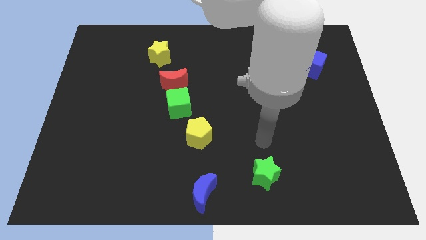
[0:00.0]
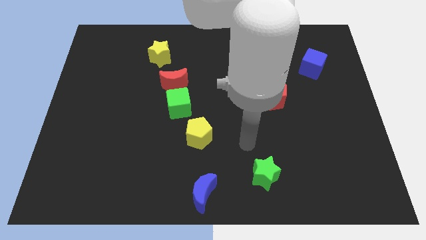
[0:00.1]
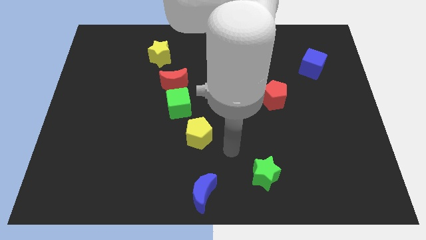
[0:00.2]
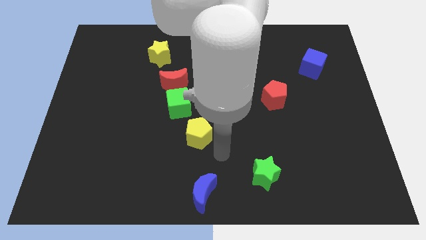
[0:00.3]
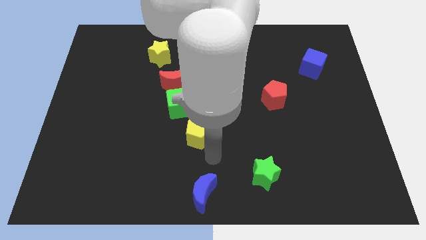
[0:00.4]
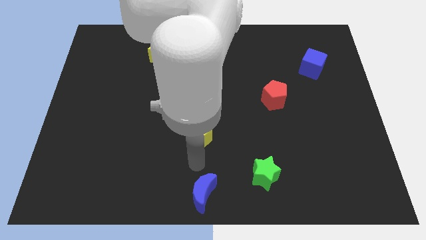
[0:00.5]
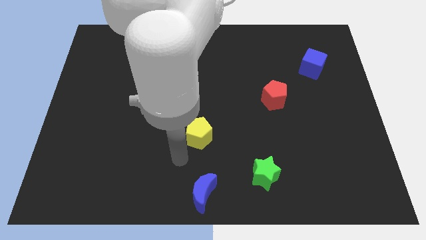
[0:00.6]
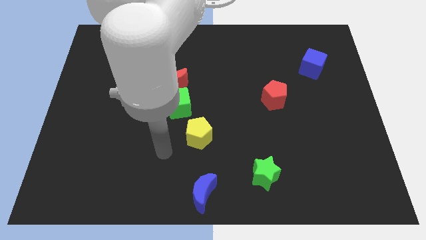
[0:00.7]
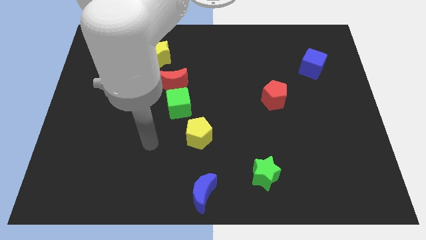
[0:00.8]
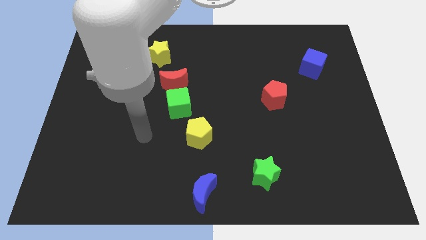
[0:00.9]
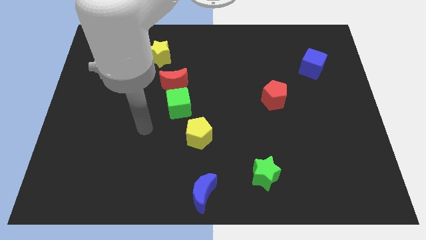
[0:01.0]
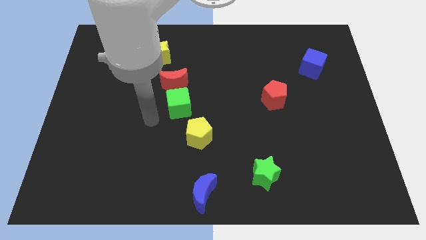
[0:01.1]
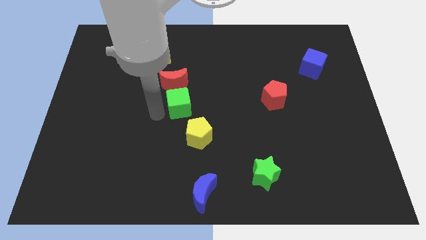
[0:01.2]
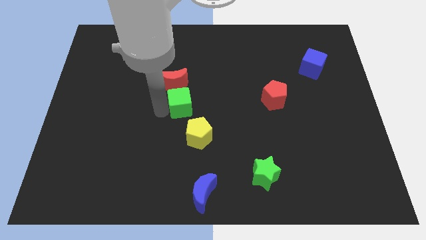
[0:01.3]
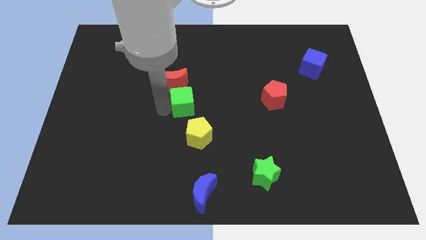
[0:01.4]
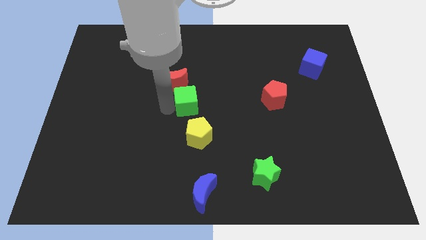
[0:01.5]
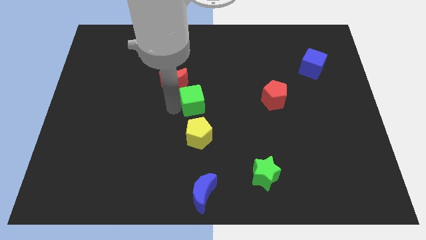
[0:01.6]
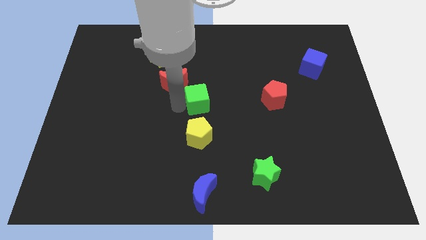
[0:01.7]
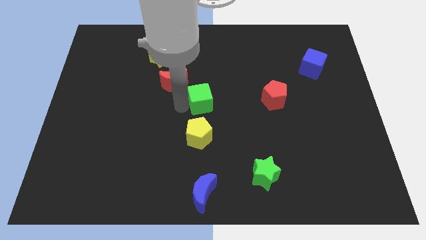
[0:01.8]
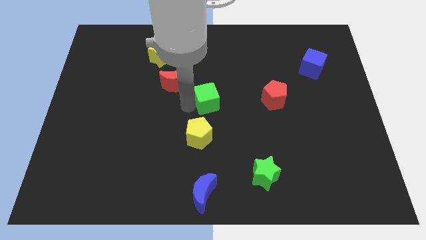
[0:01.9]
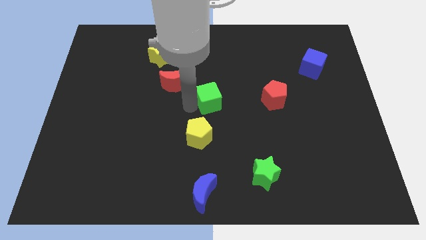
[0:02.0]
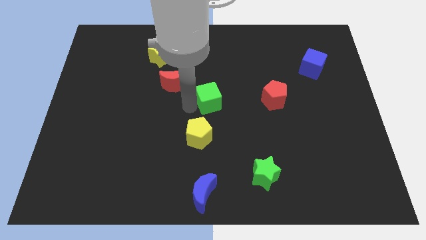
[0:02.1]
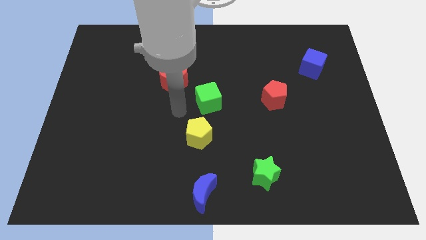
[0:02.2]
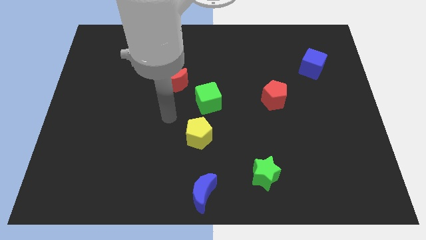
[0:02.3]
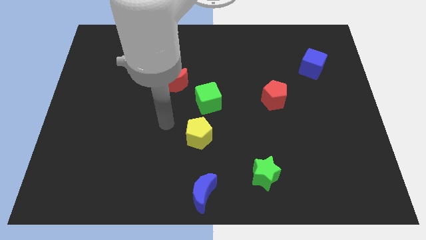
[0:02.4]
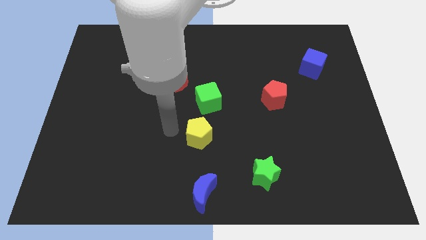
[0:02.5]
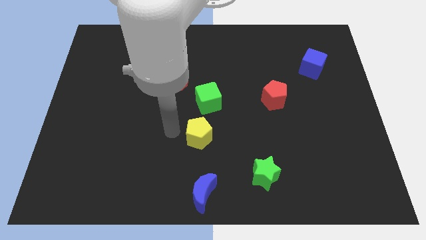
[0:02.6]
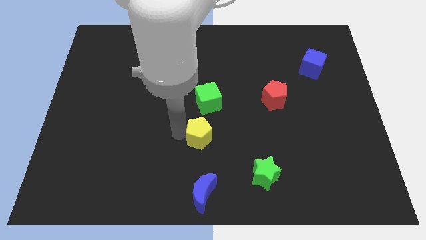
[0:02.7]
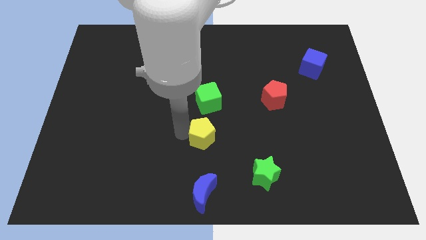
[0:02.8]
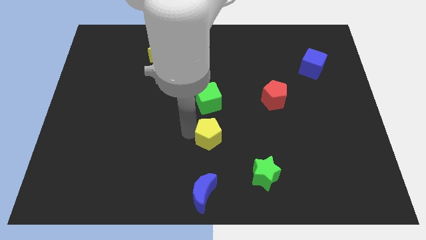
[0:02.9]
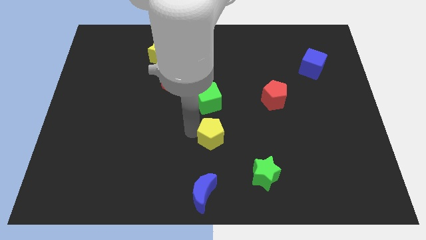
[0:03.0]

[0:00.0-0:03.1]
adjust green cube and yellow pentagon slightly towards right

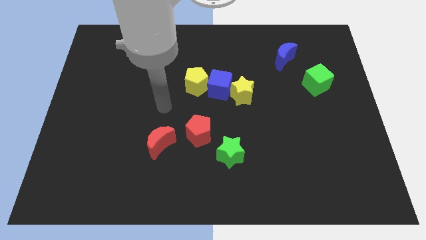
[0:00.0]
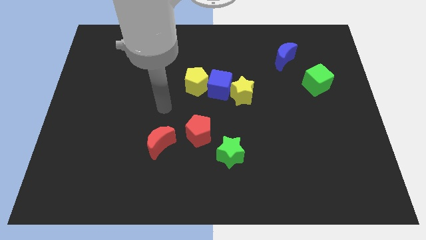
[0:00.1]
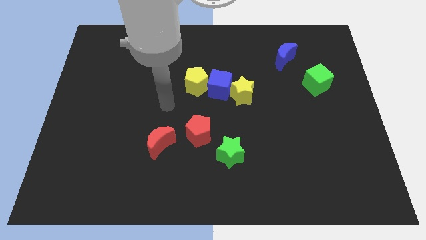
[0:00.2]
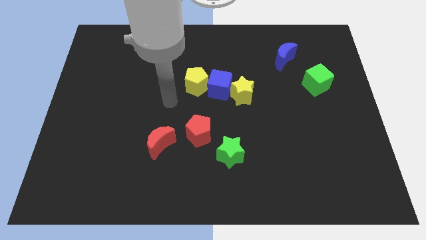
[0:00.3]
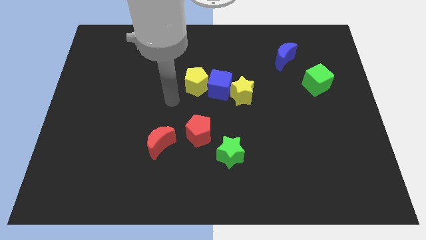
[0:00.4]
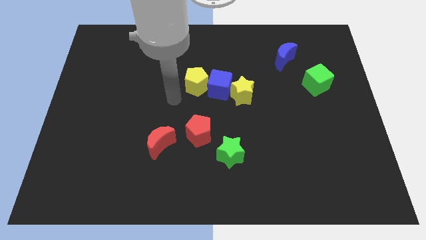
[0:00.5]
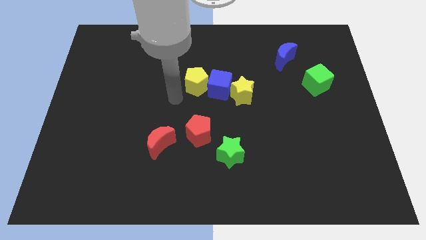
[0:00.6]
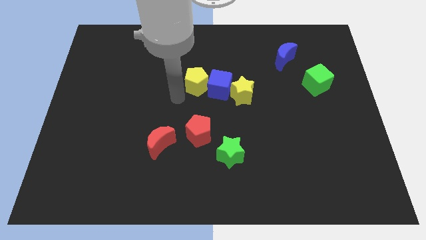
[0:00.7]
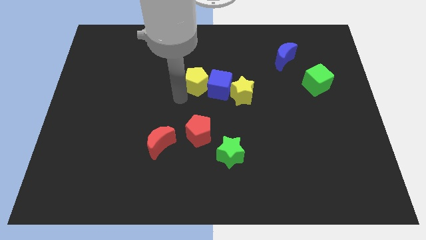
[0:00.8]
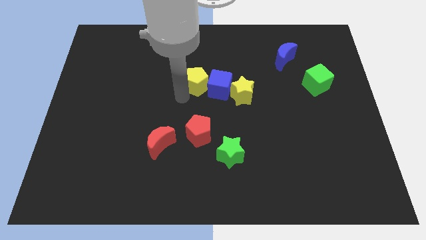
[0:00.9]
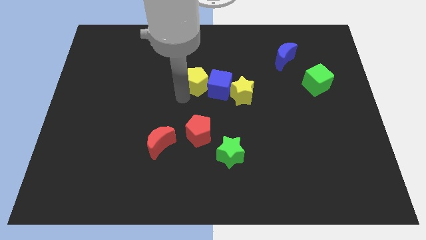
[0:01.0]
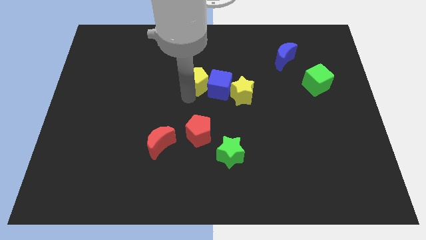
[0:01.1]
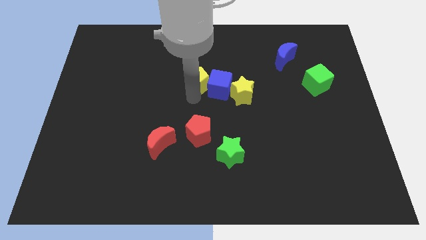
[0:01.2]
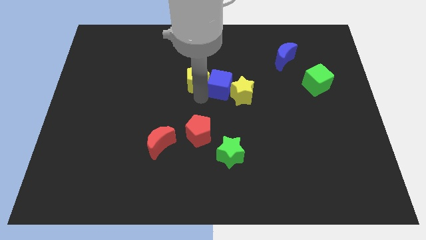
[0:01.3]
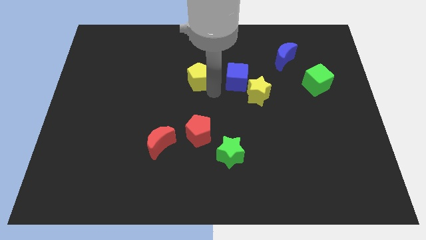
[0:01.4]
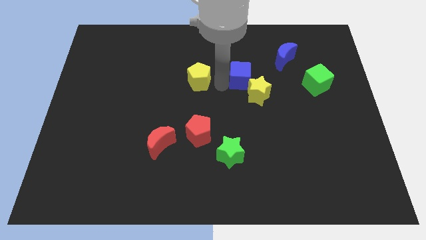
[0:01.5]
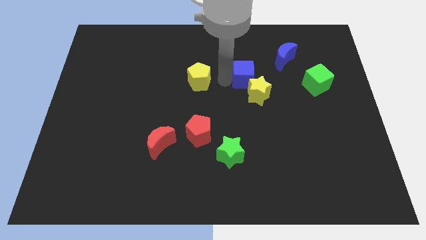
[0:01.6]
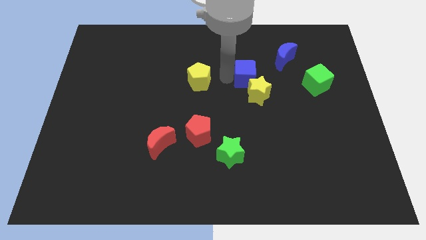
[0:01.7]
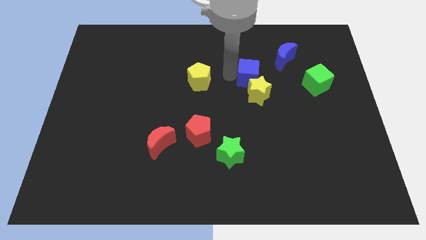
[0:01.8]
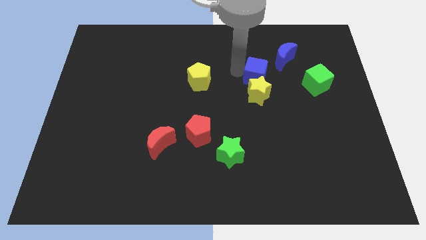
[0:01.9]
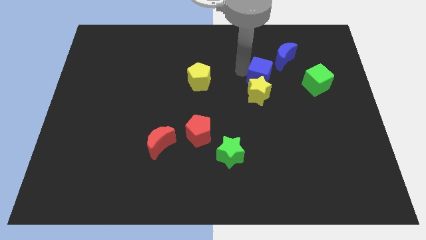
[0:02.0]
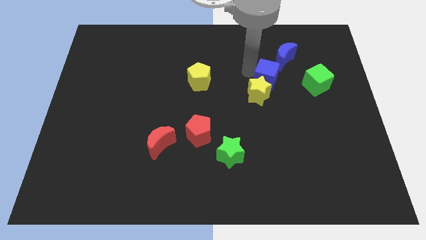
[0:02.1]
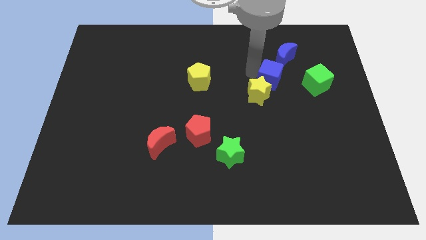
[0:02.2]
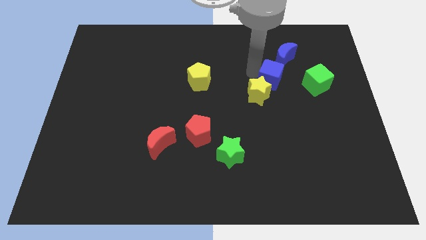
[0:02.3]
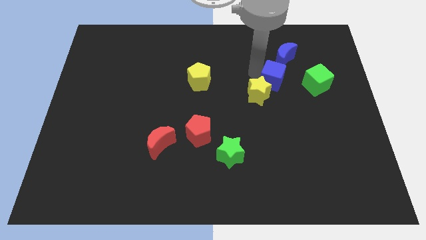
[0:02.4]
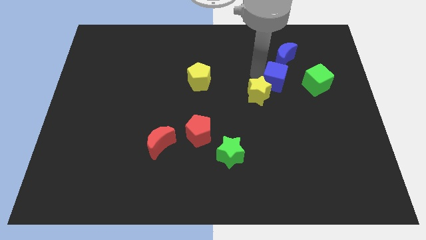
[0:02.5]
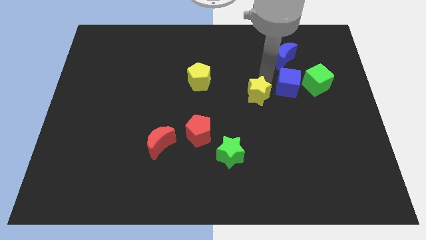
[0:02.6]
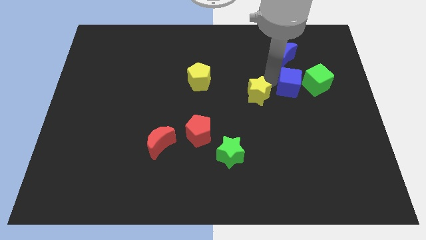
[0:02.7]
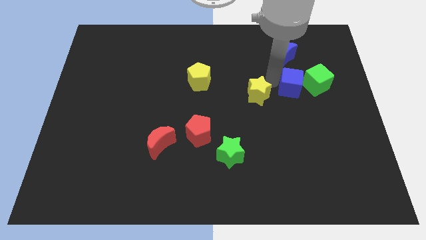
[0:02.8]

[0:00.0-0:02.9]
move the blue cube towards the green cube

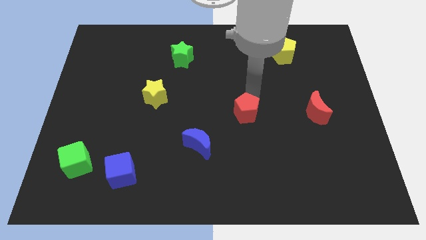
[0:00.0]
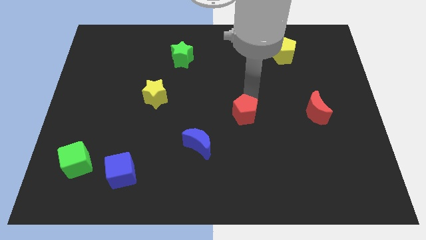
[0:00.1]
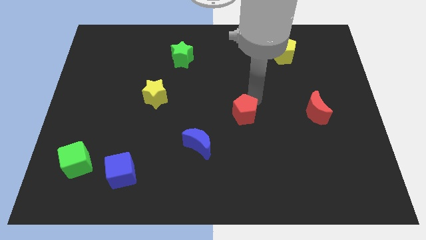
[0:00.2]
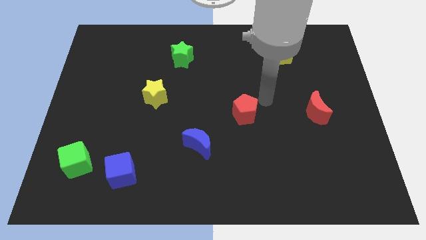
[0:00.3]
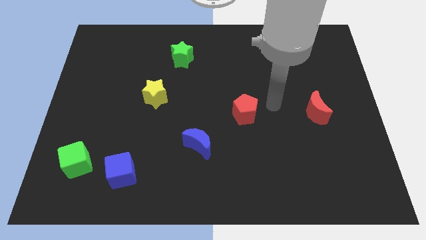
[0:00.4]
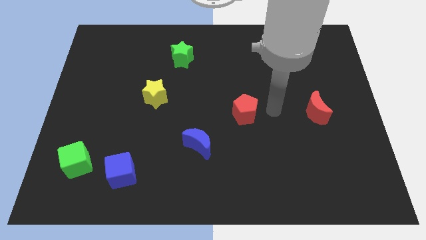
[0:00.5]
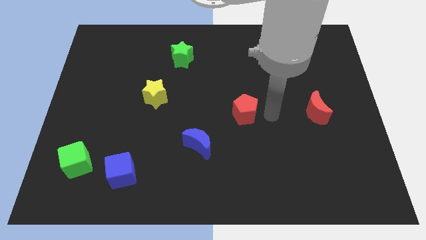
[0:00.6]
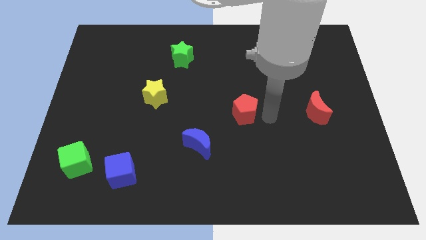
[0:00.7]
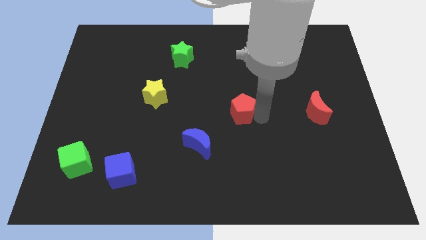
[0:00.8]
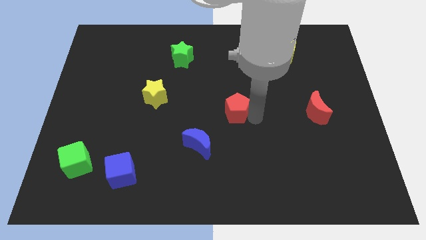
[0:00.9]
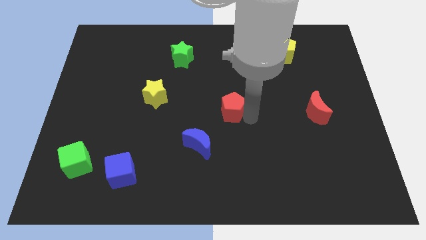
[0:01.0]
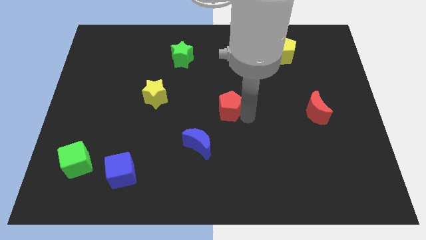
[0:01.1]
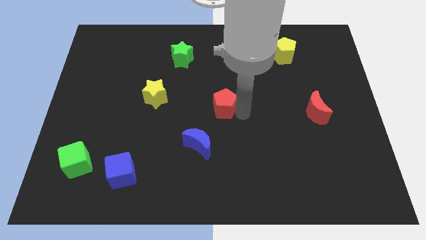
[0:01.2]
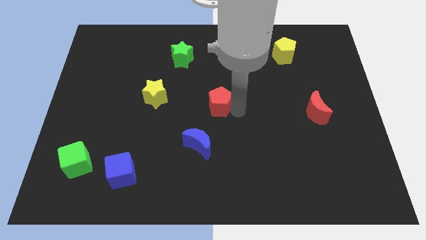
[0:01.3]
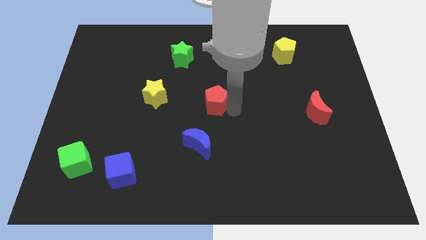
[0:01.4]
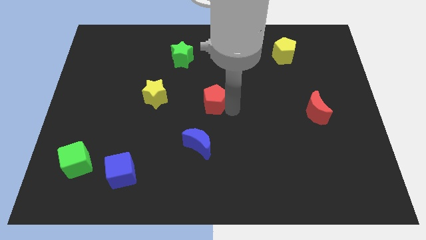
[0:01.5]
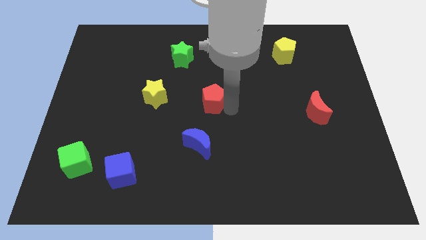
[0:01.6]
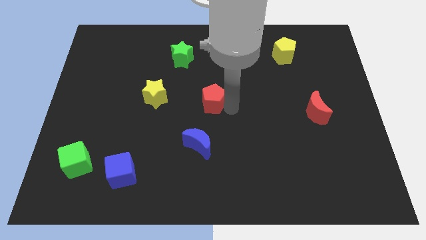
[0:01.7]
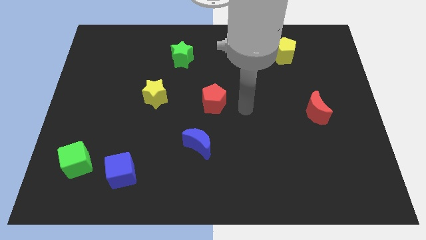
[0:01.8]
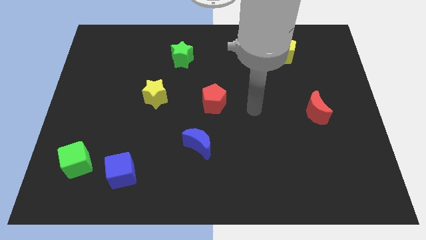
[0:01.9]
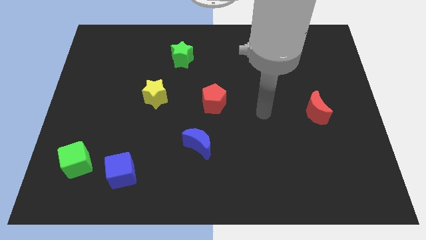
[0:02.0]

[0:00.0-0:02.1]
move the red pentagon to the top of the blue crescent

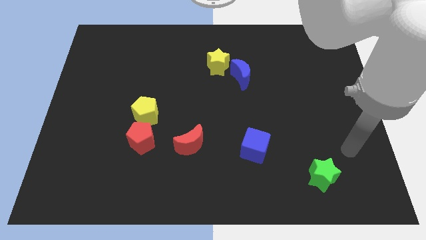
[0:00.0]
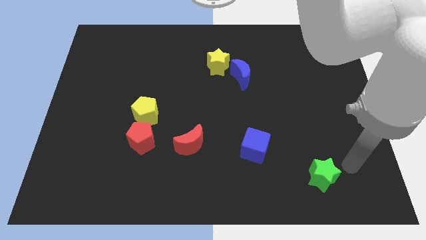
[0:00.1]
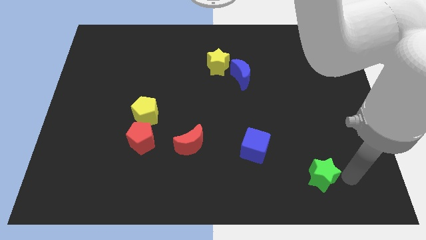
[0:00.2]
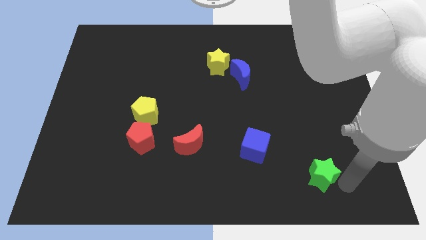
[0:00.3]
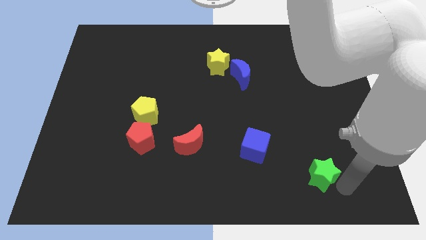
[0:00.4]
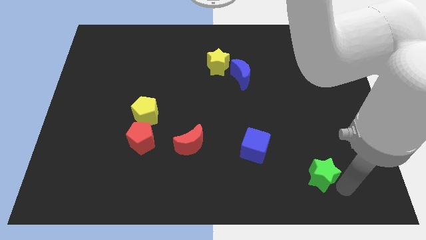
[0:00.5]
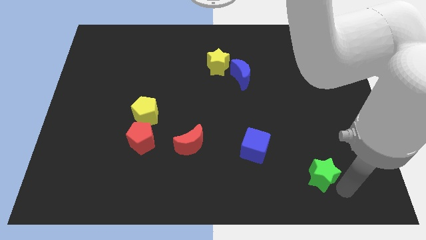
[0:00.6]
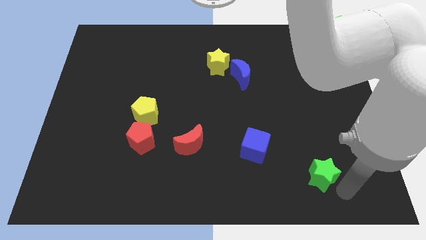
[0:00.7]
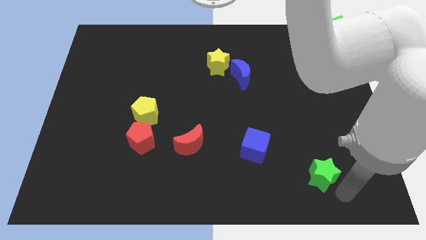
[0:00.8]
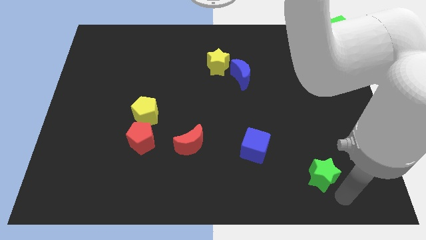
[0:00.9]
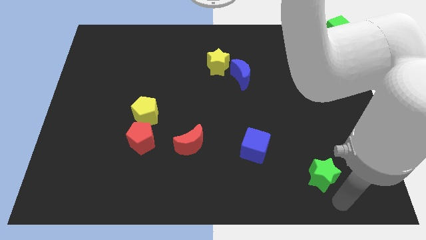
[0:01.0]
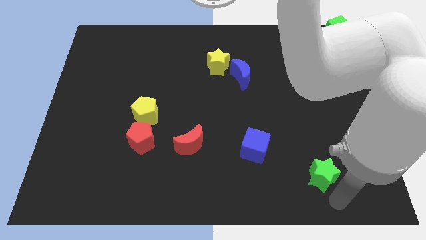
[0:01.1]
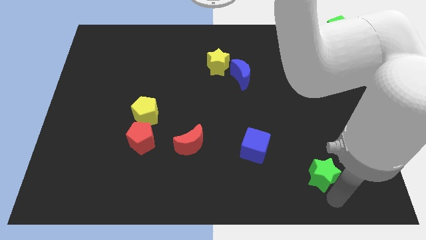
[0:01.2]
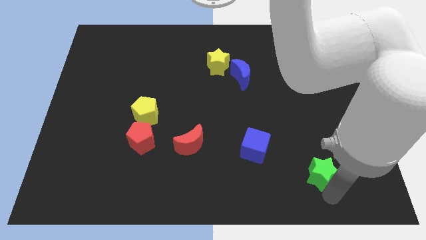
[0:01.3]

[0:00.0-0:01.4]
move arm to the bottom of green star
